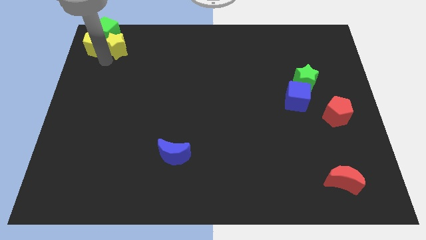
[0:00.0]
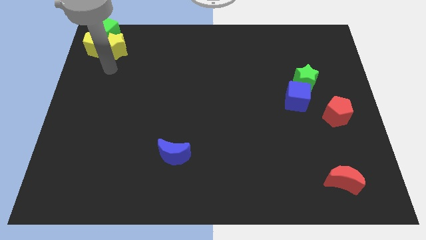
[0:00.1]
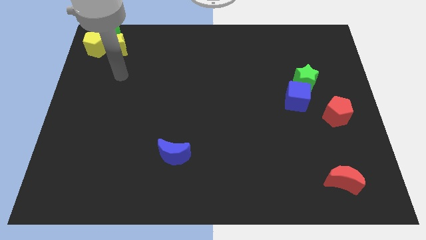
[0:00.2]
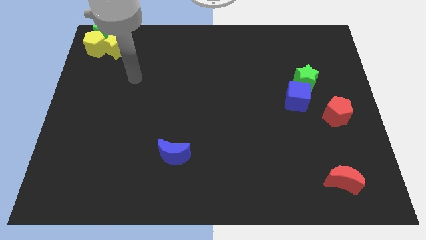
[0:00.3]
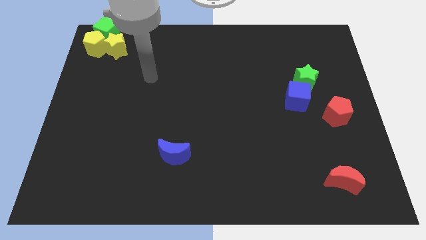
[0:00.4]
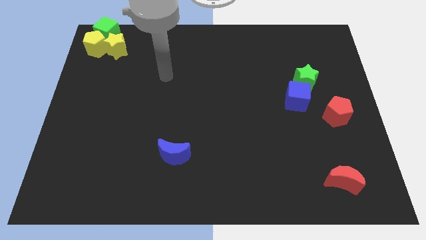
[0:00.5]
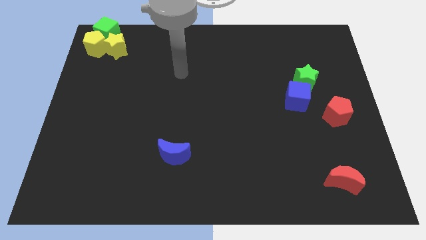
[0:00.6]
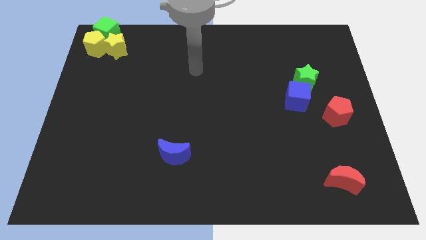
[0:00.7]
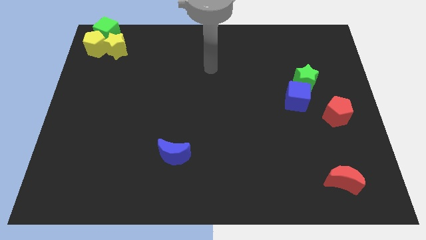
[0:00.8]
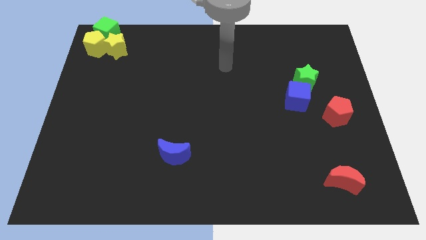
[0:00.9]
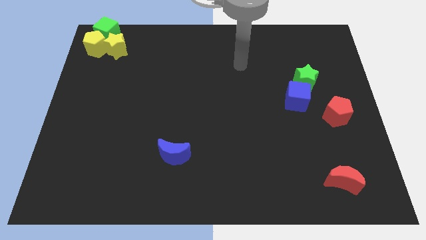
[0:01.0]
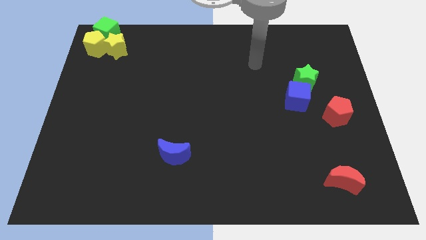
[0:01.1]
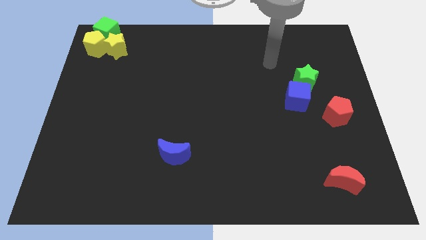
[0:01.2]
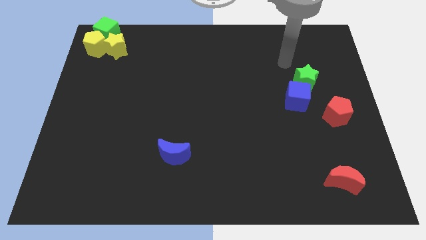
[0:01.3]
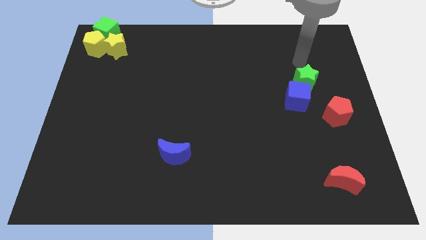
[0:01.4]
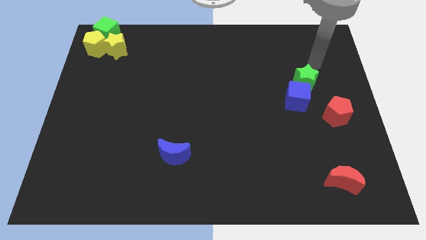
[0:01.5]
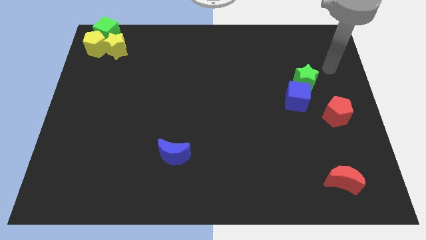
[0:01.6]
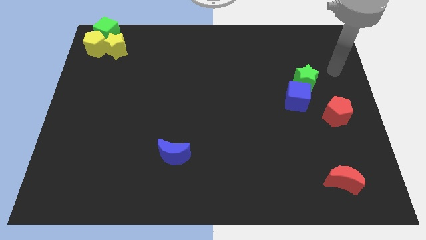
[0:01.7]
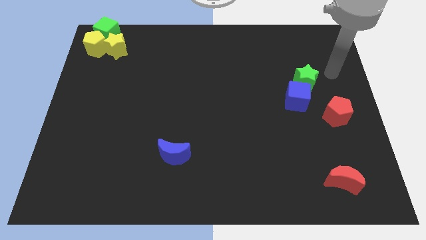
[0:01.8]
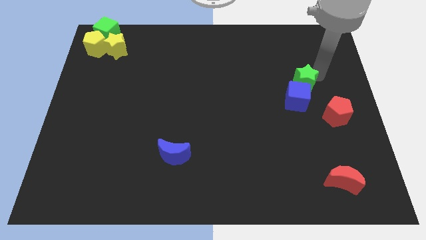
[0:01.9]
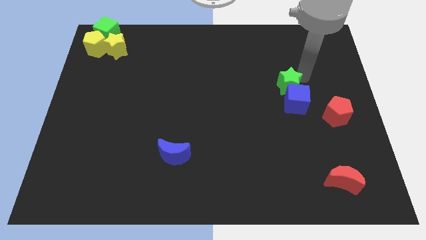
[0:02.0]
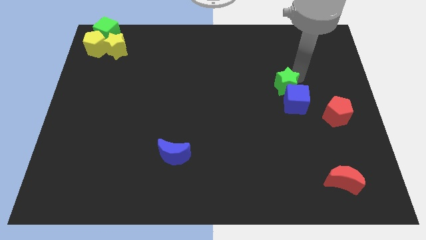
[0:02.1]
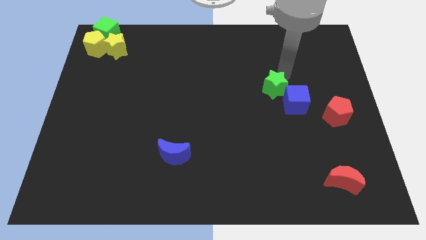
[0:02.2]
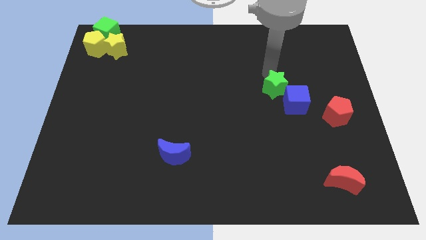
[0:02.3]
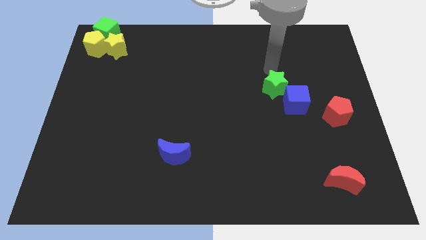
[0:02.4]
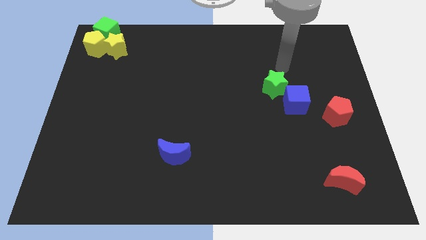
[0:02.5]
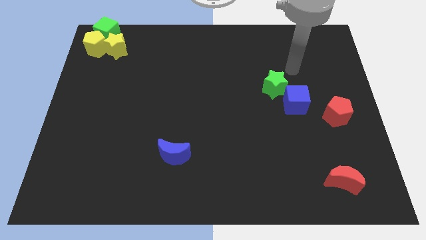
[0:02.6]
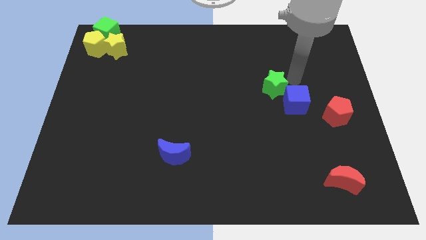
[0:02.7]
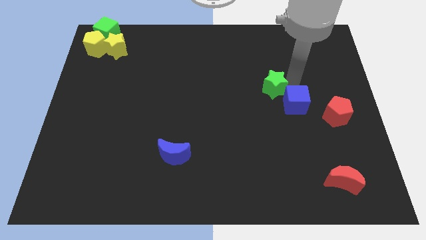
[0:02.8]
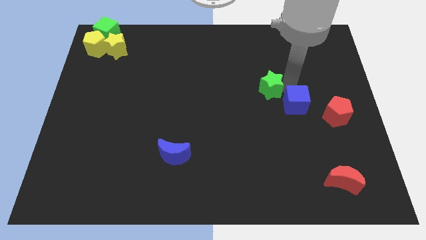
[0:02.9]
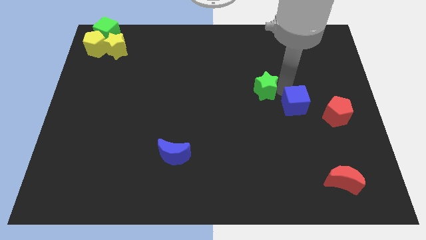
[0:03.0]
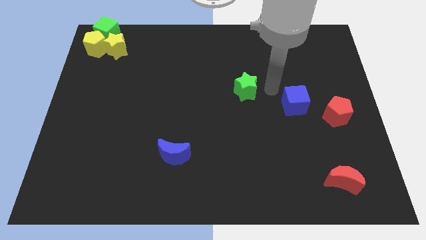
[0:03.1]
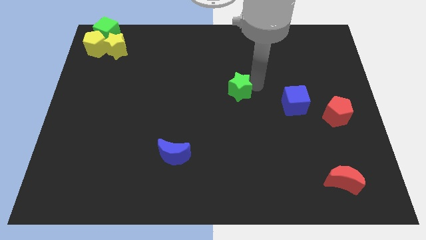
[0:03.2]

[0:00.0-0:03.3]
go and separate the green star and the blue cube

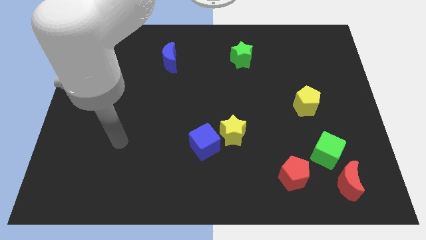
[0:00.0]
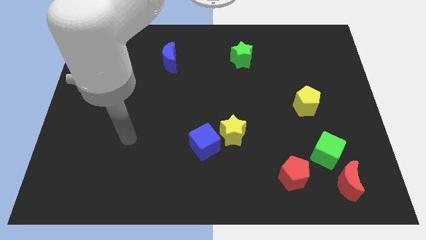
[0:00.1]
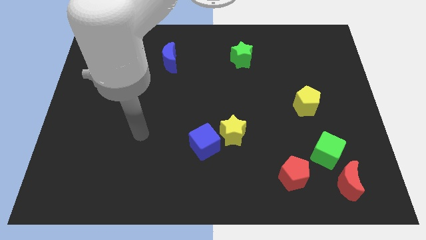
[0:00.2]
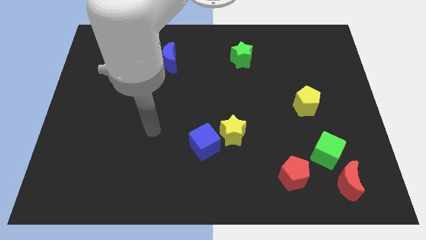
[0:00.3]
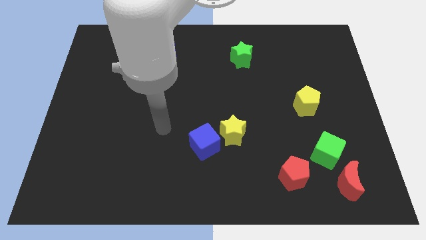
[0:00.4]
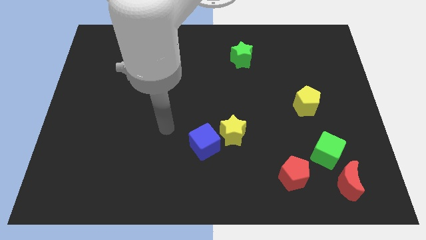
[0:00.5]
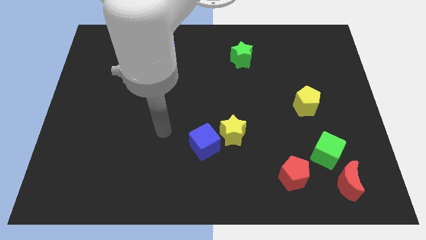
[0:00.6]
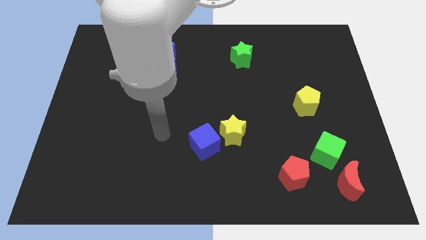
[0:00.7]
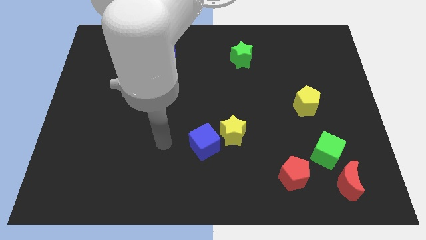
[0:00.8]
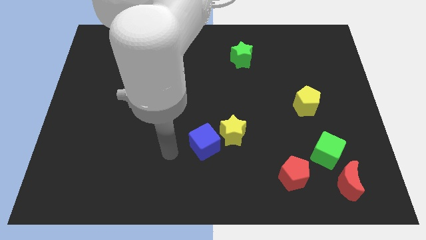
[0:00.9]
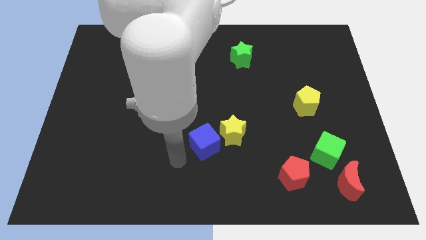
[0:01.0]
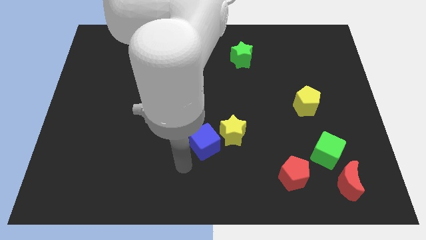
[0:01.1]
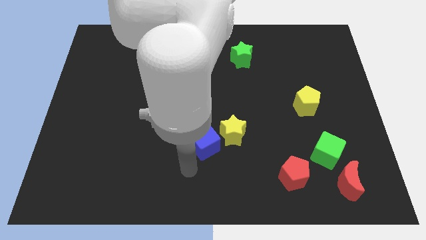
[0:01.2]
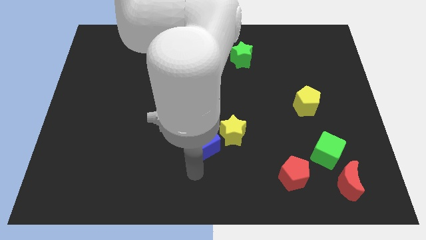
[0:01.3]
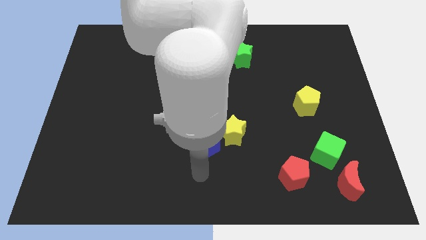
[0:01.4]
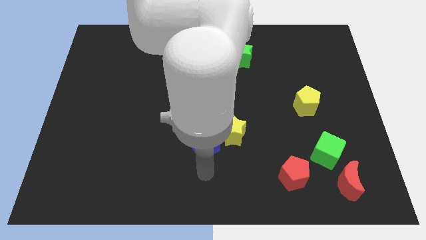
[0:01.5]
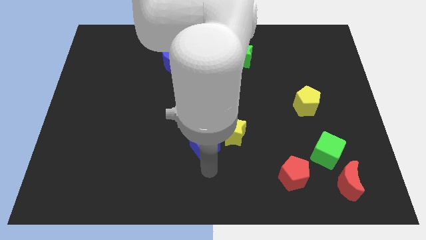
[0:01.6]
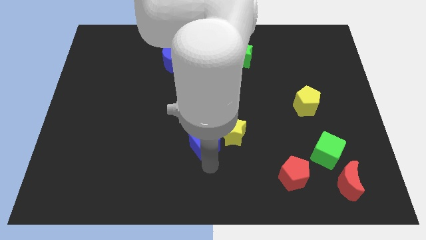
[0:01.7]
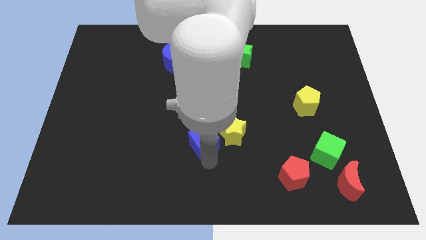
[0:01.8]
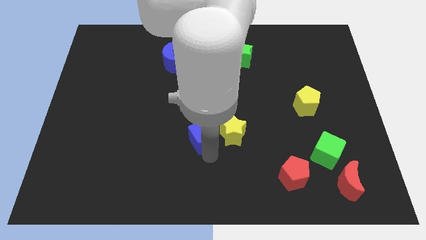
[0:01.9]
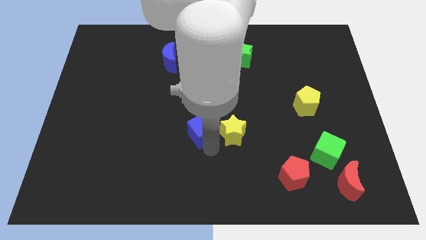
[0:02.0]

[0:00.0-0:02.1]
move the arm towards the blue cube

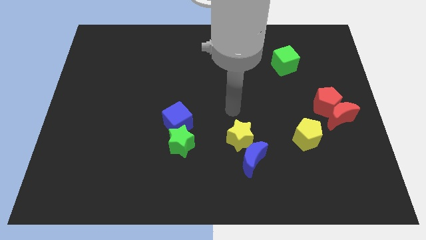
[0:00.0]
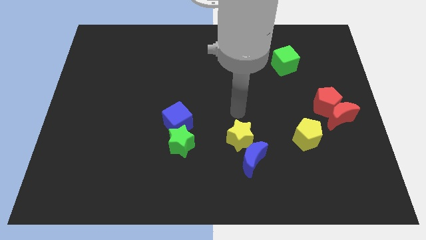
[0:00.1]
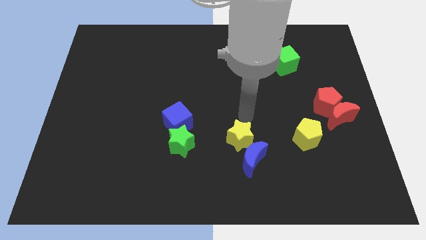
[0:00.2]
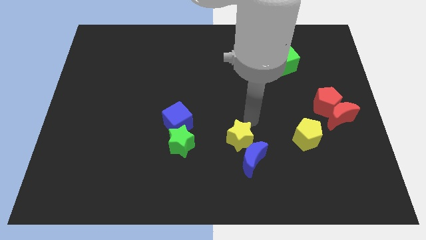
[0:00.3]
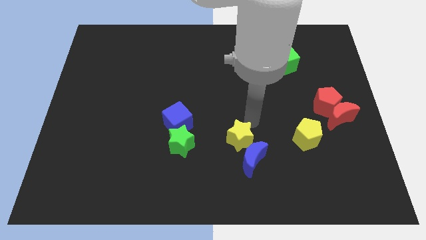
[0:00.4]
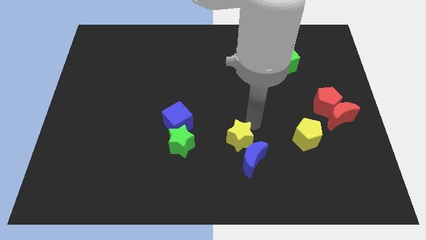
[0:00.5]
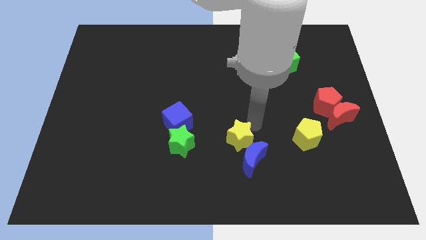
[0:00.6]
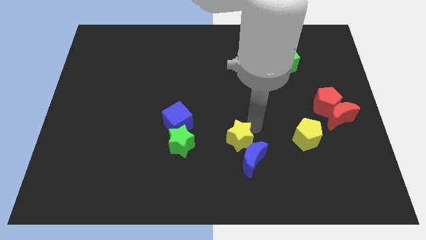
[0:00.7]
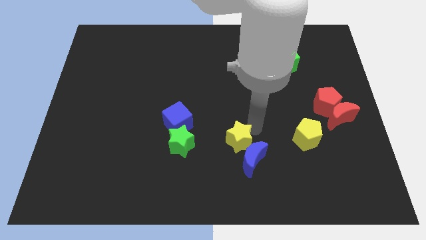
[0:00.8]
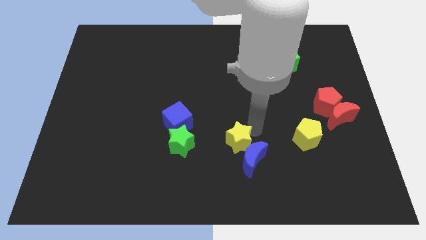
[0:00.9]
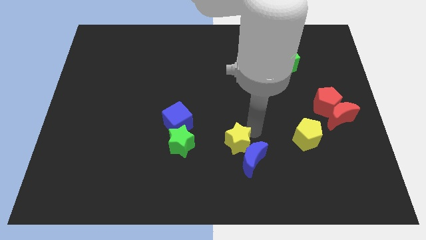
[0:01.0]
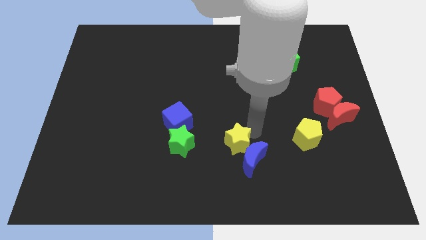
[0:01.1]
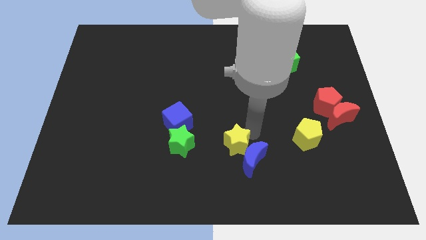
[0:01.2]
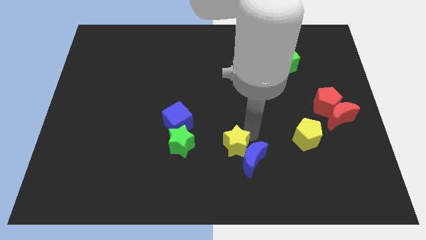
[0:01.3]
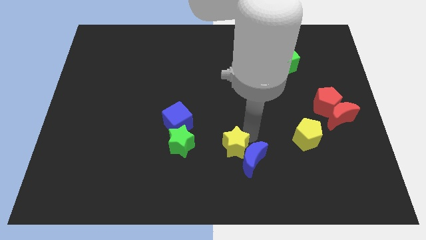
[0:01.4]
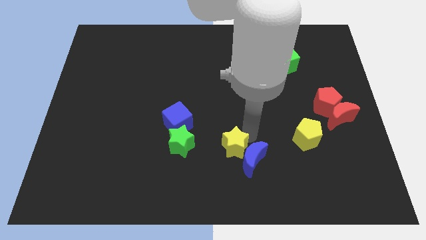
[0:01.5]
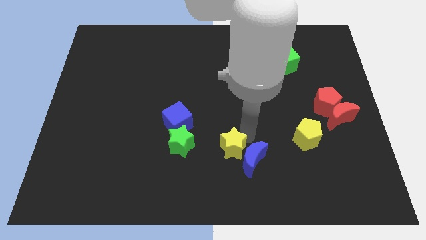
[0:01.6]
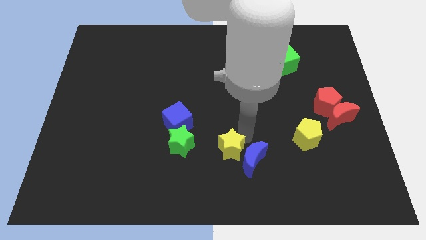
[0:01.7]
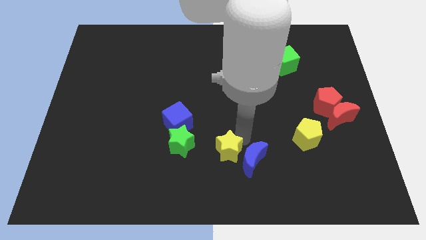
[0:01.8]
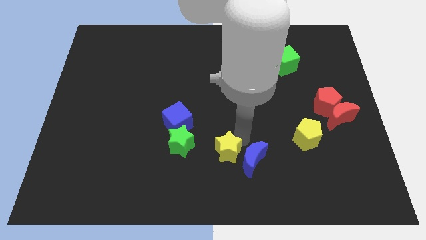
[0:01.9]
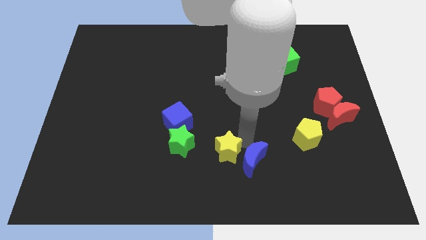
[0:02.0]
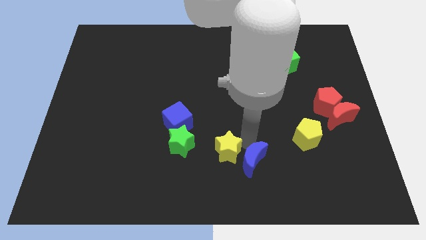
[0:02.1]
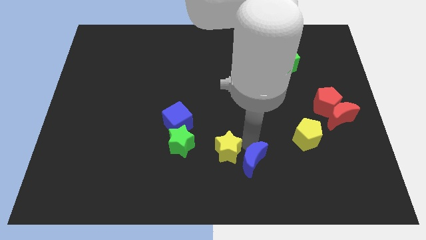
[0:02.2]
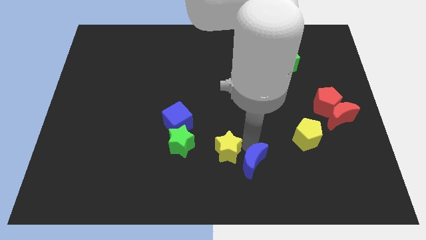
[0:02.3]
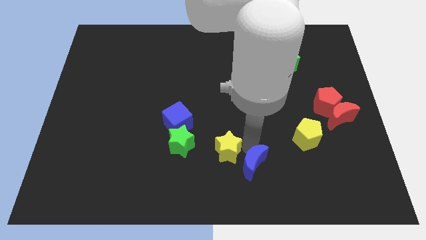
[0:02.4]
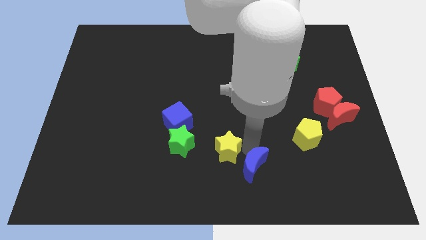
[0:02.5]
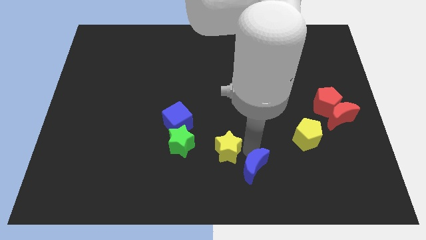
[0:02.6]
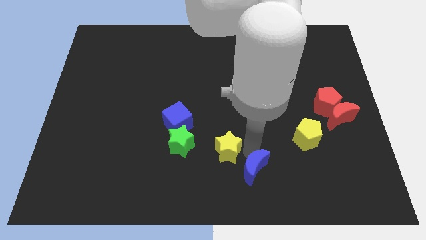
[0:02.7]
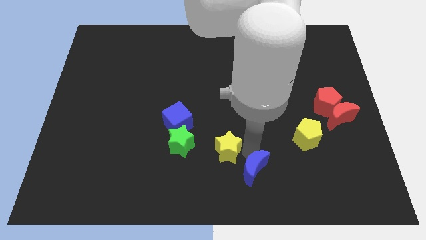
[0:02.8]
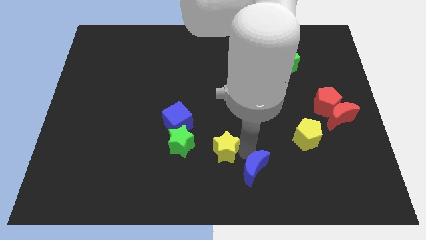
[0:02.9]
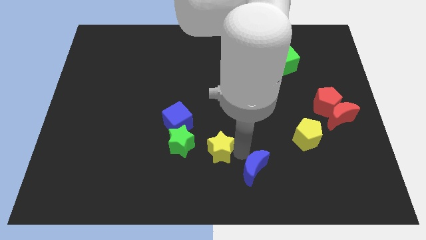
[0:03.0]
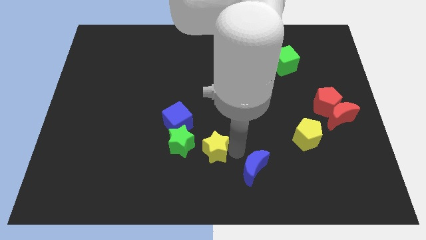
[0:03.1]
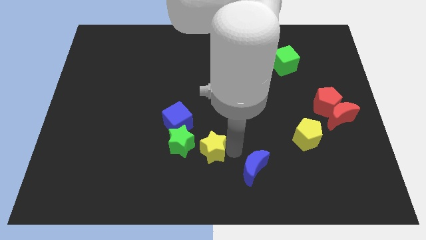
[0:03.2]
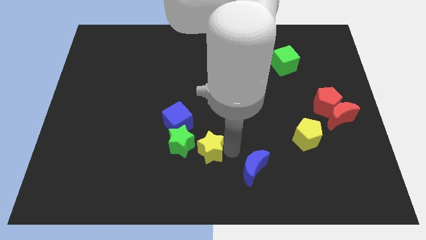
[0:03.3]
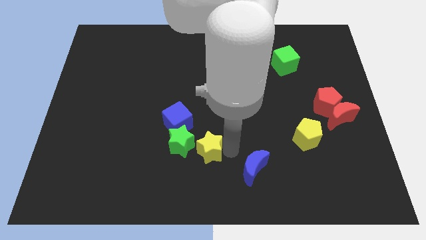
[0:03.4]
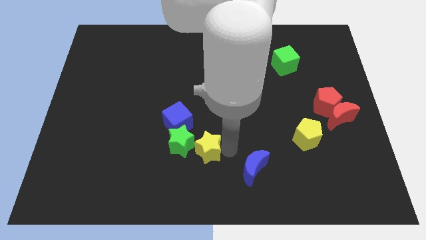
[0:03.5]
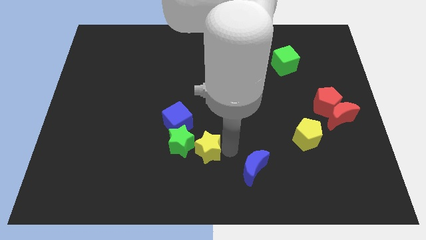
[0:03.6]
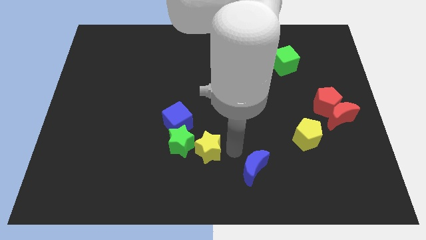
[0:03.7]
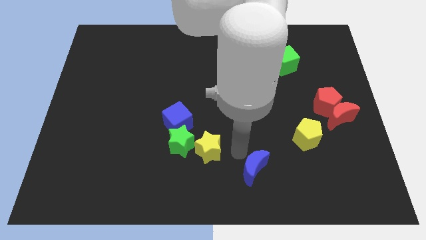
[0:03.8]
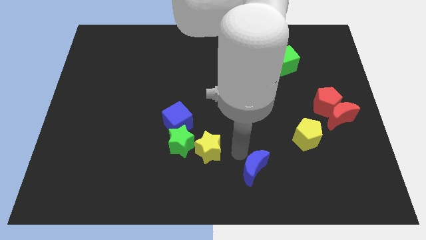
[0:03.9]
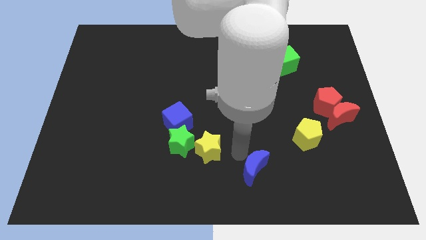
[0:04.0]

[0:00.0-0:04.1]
push the yellow star to the right side of the green star
